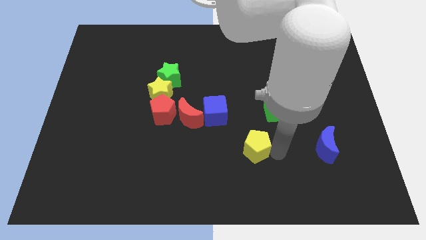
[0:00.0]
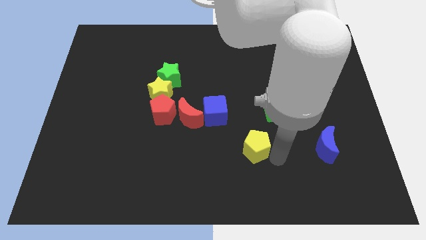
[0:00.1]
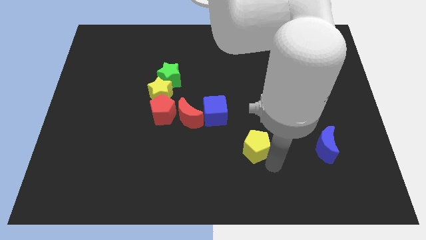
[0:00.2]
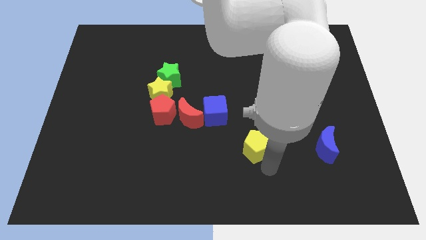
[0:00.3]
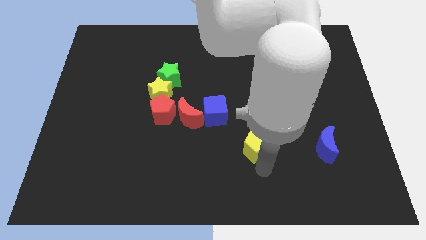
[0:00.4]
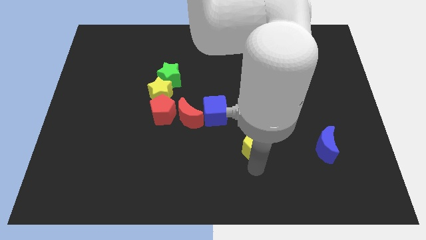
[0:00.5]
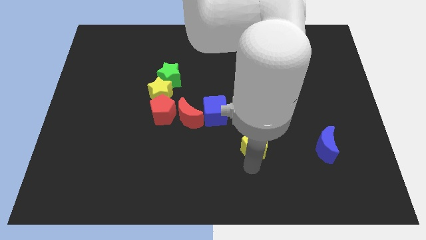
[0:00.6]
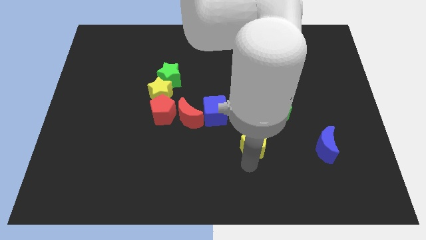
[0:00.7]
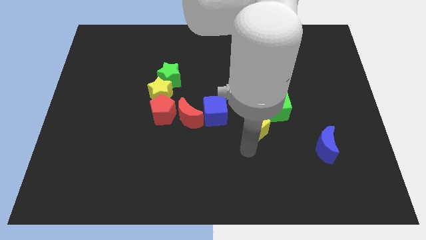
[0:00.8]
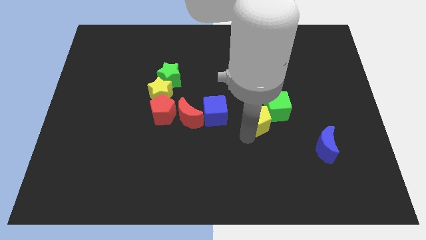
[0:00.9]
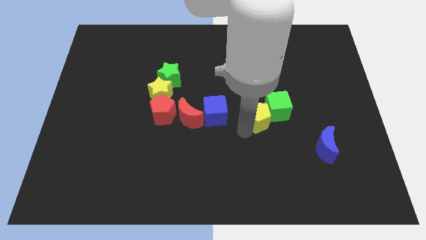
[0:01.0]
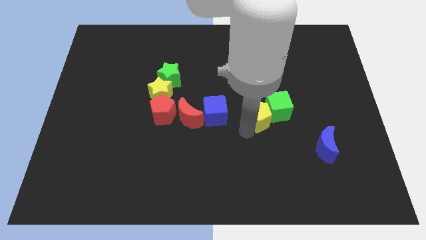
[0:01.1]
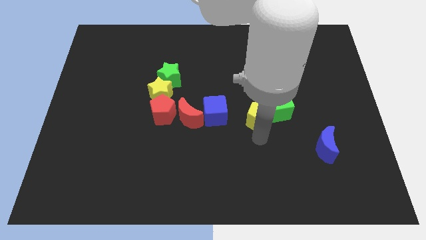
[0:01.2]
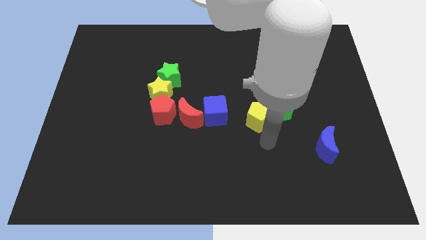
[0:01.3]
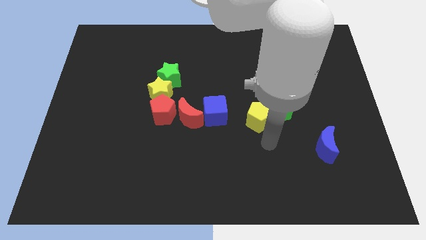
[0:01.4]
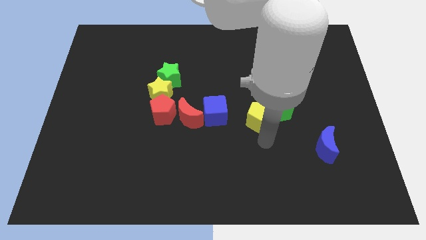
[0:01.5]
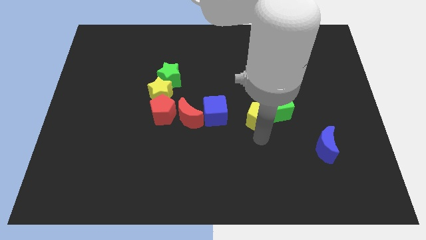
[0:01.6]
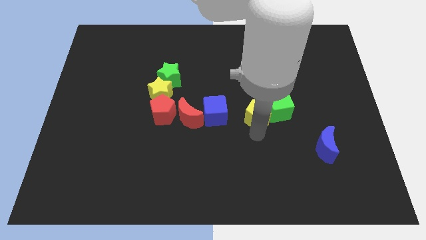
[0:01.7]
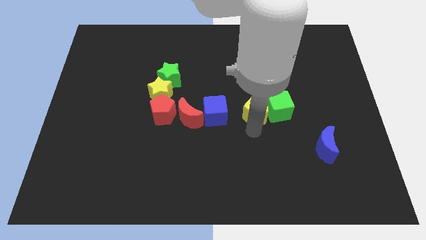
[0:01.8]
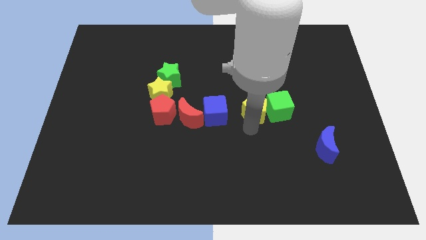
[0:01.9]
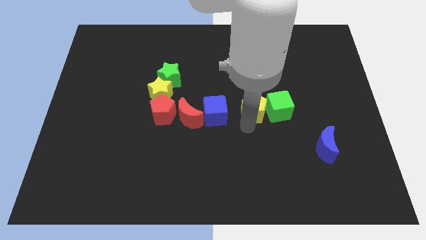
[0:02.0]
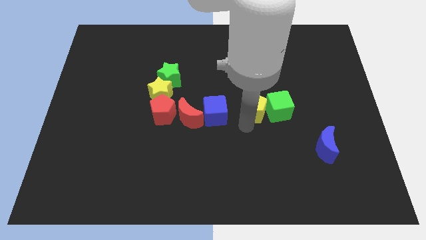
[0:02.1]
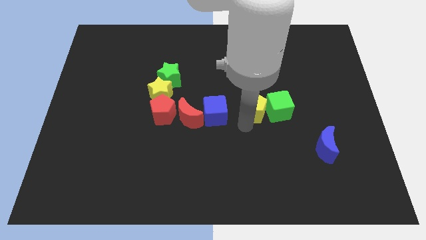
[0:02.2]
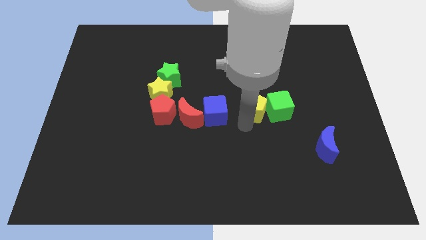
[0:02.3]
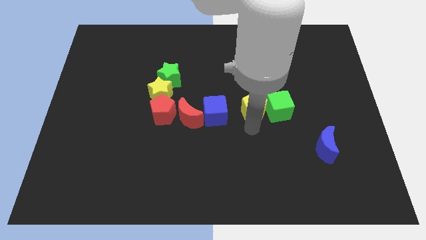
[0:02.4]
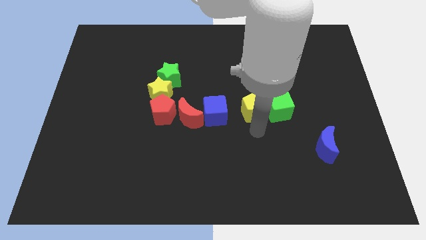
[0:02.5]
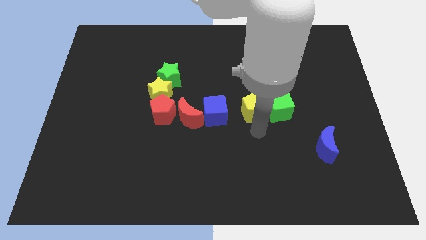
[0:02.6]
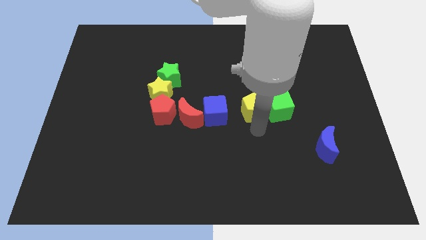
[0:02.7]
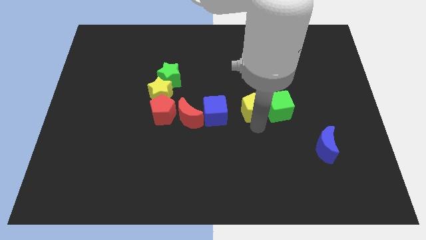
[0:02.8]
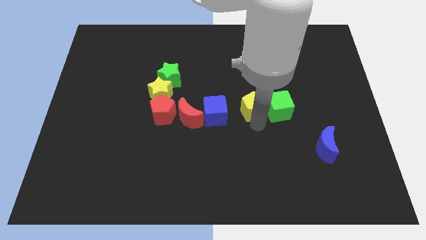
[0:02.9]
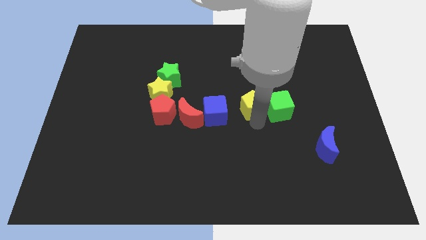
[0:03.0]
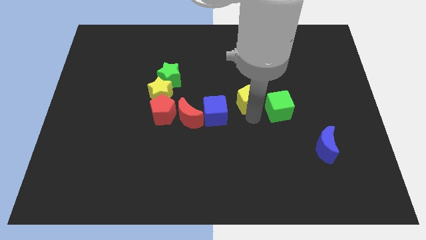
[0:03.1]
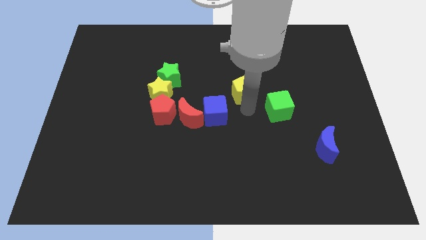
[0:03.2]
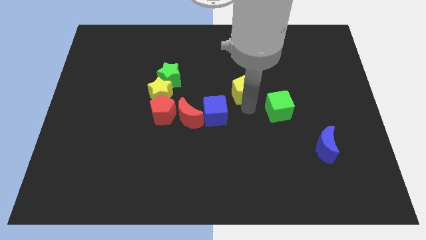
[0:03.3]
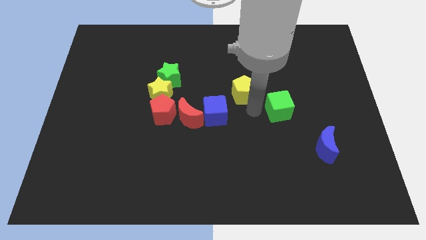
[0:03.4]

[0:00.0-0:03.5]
push the yellow pentagon top right of the blue cube

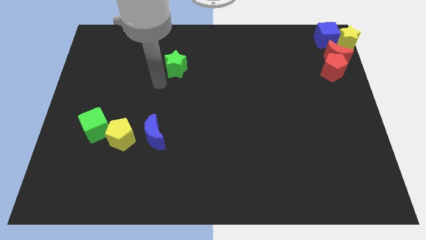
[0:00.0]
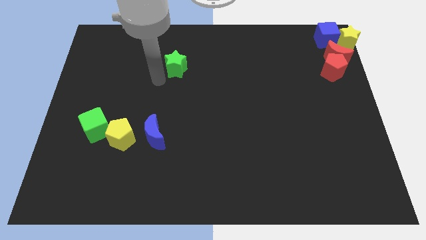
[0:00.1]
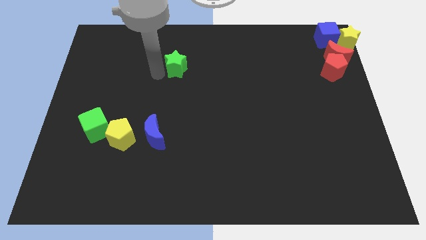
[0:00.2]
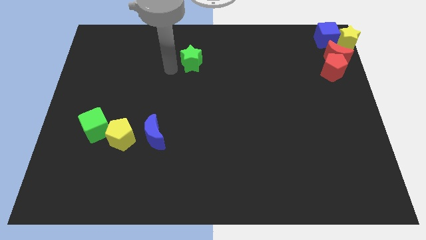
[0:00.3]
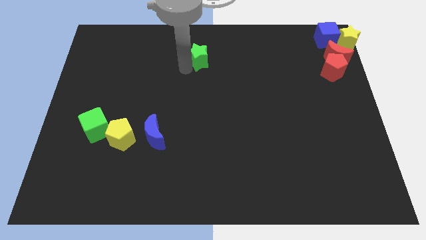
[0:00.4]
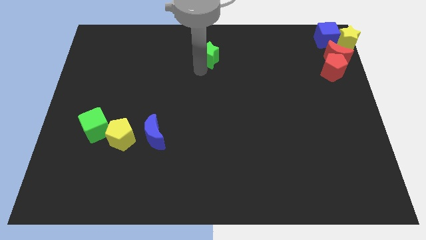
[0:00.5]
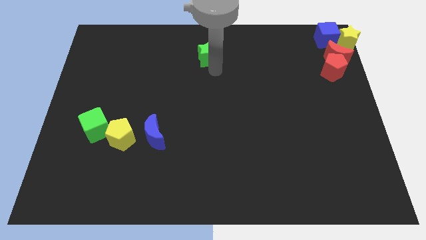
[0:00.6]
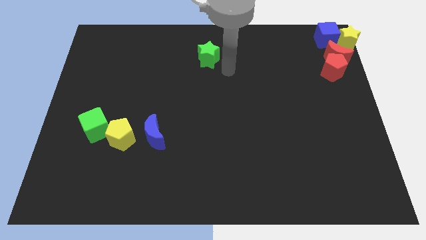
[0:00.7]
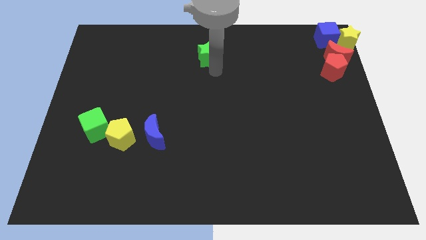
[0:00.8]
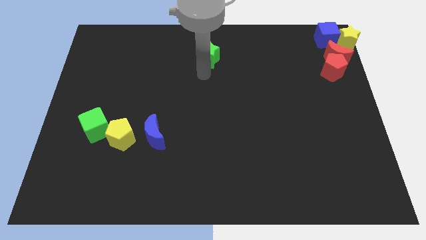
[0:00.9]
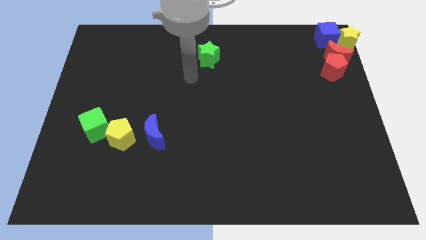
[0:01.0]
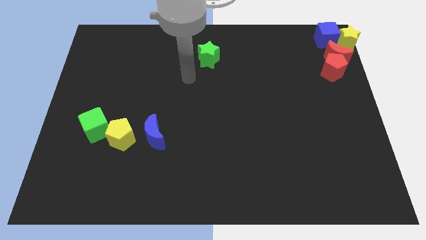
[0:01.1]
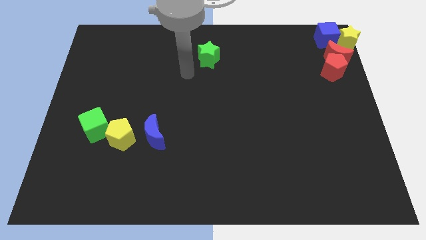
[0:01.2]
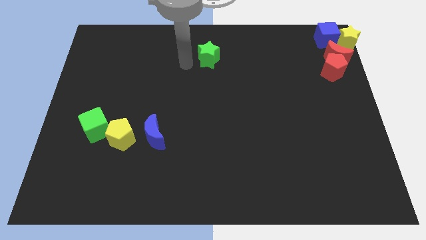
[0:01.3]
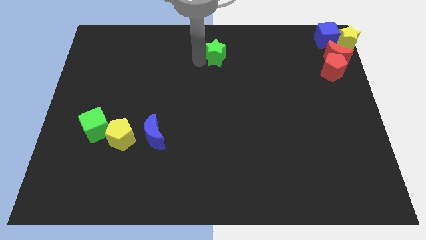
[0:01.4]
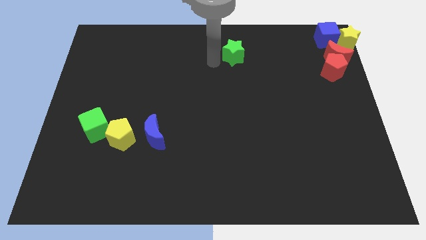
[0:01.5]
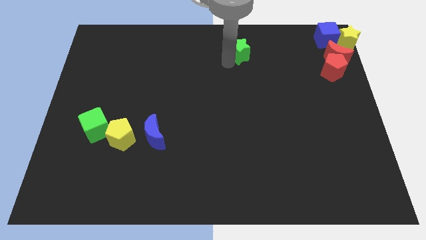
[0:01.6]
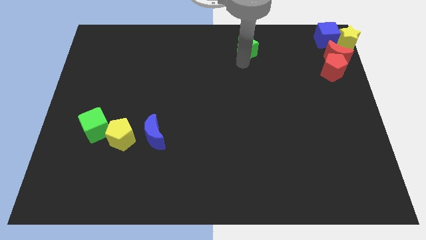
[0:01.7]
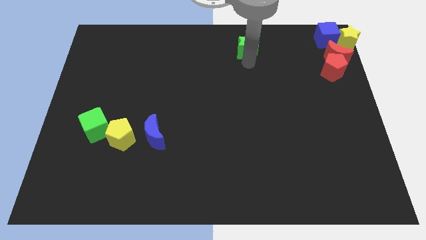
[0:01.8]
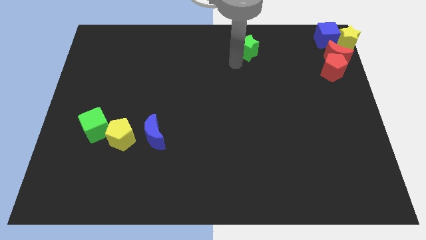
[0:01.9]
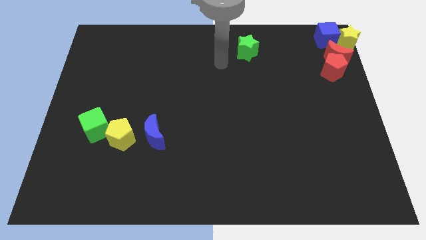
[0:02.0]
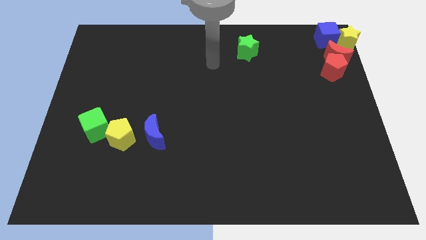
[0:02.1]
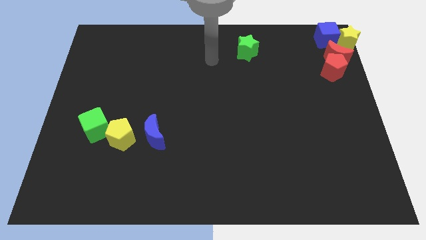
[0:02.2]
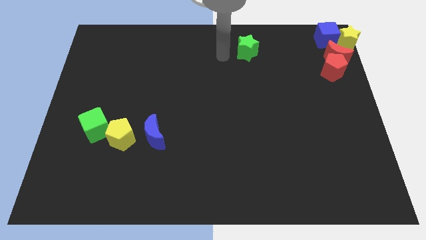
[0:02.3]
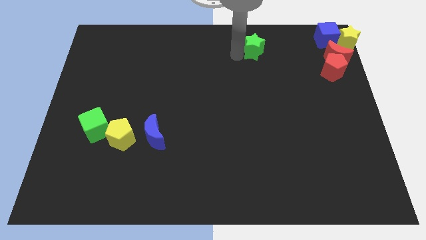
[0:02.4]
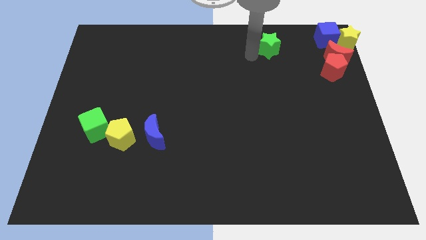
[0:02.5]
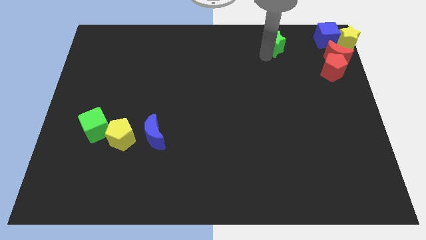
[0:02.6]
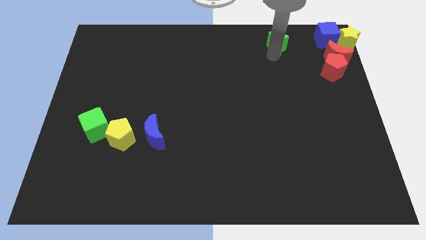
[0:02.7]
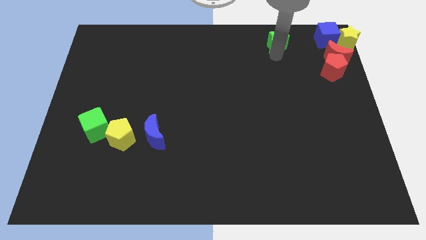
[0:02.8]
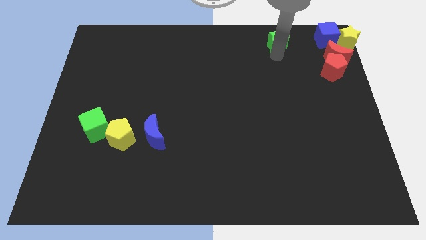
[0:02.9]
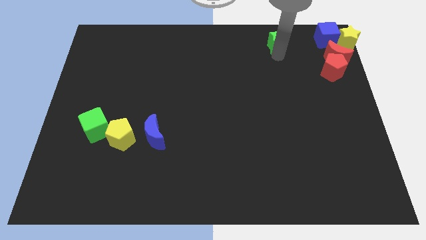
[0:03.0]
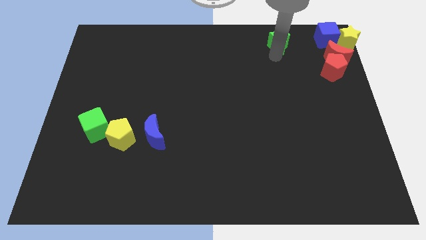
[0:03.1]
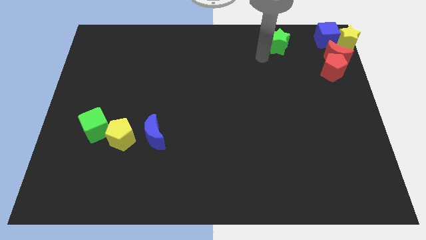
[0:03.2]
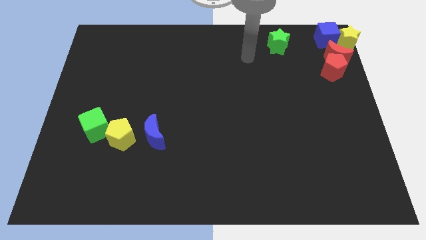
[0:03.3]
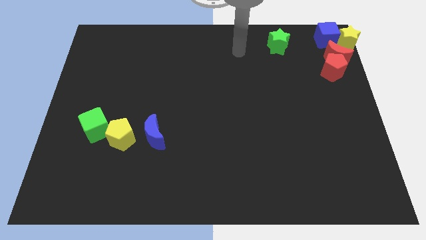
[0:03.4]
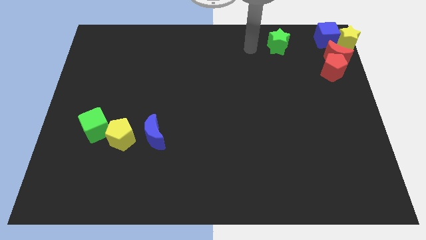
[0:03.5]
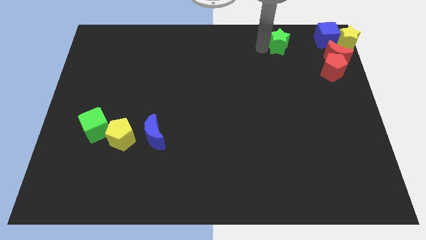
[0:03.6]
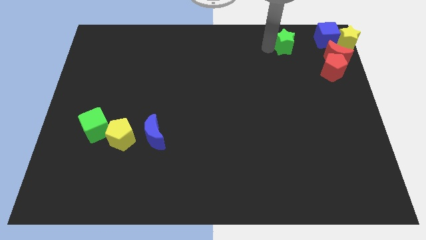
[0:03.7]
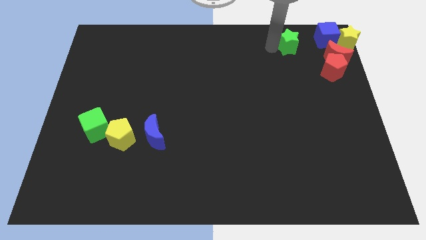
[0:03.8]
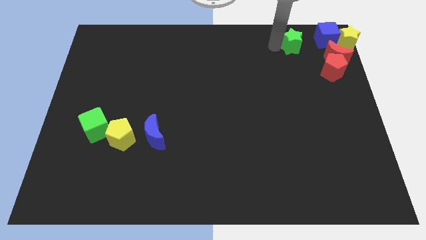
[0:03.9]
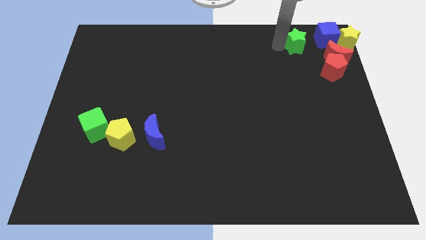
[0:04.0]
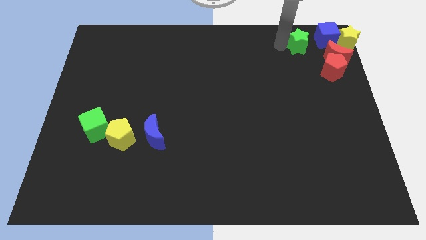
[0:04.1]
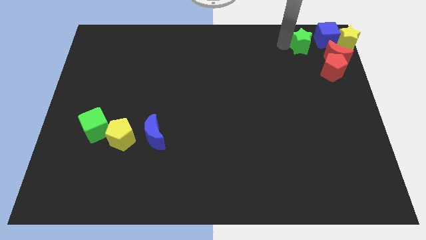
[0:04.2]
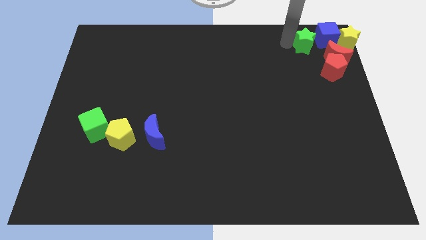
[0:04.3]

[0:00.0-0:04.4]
place green star to the left of blue cube

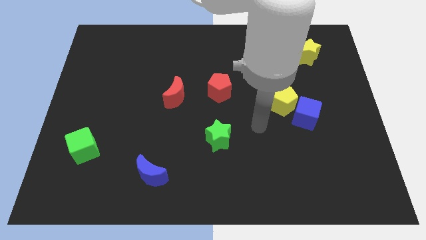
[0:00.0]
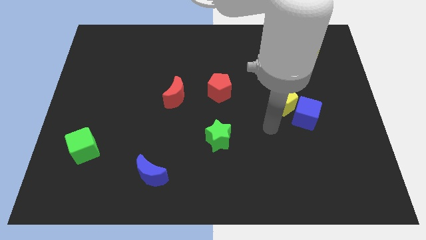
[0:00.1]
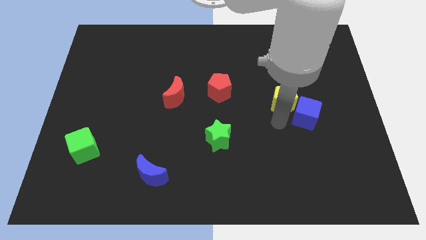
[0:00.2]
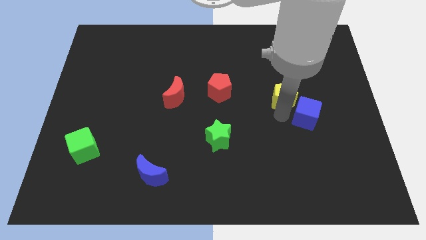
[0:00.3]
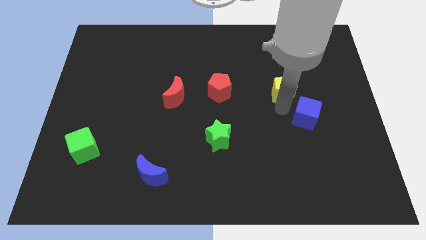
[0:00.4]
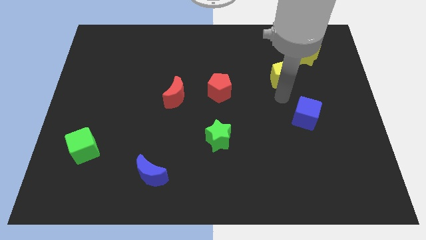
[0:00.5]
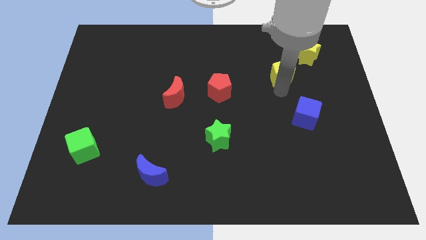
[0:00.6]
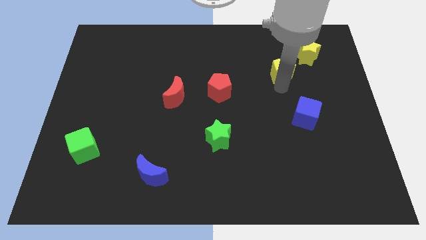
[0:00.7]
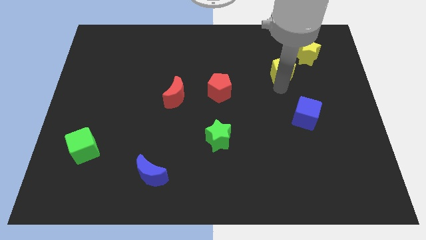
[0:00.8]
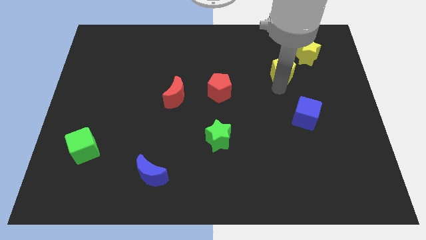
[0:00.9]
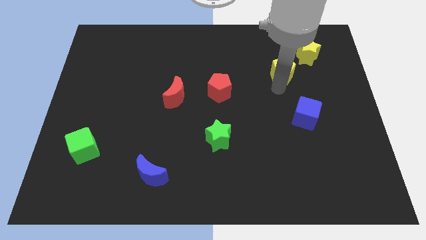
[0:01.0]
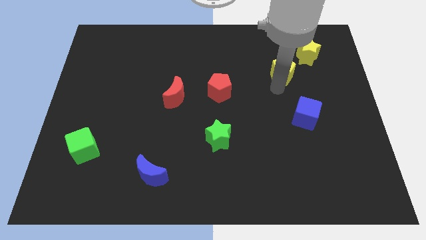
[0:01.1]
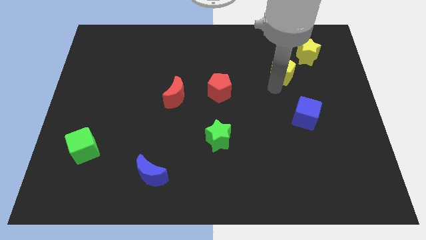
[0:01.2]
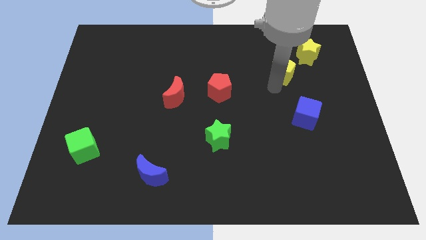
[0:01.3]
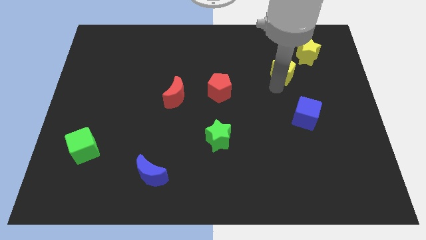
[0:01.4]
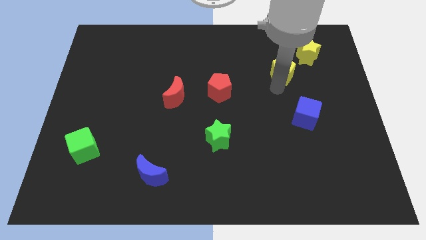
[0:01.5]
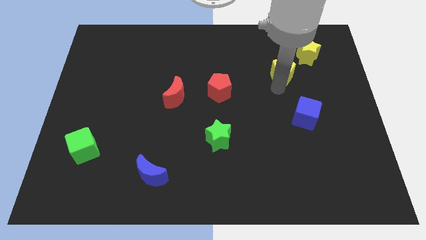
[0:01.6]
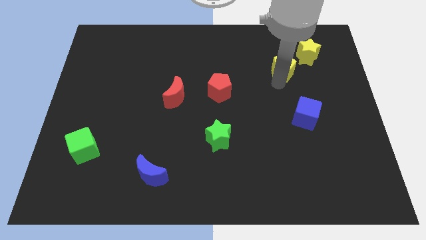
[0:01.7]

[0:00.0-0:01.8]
push the yellow pentagon towards the yellow star
